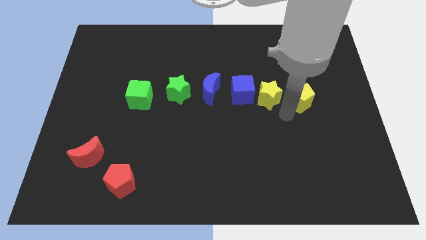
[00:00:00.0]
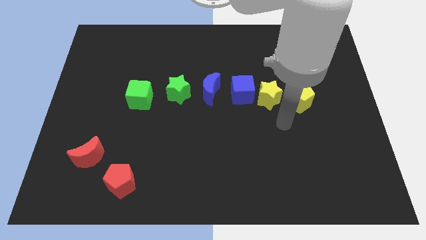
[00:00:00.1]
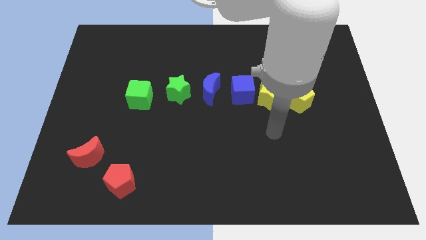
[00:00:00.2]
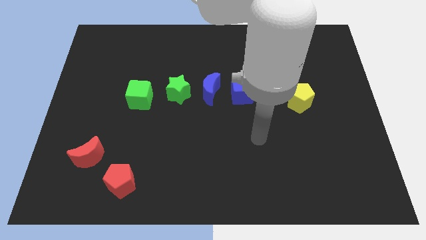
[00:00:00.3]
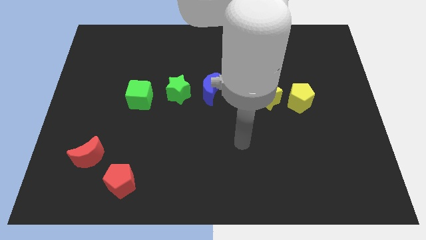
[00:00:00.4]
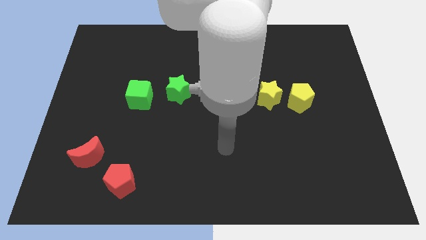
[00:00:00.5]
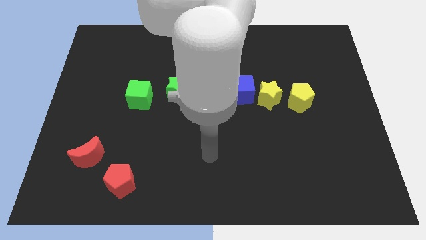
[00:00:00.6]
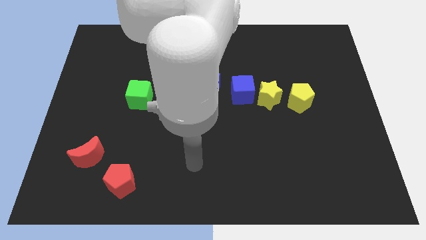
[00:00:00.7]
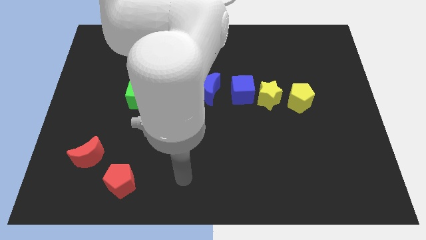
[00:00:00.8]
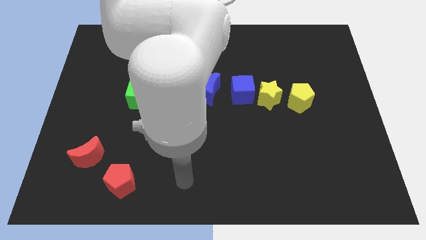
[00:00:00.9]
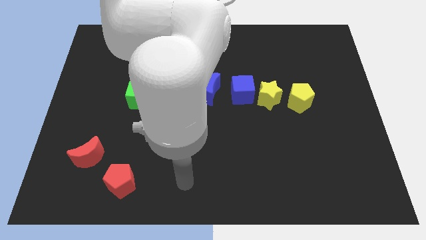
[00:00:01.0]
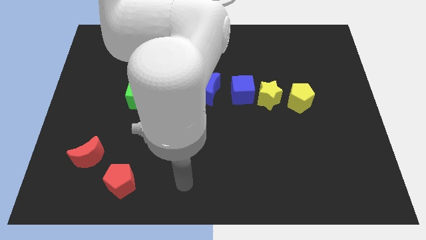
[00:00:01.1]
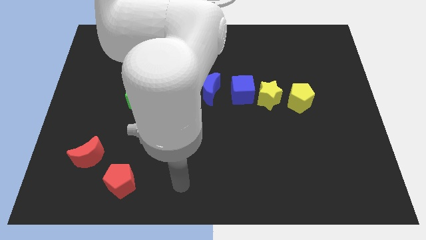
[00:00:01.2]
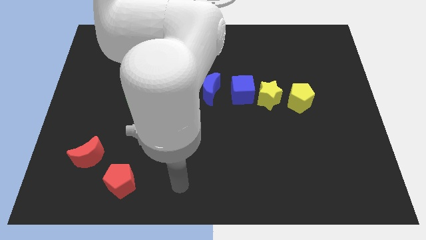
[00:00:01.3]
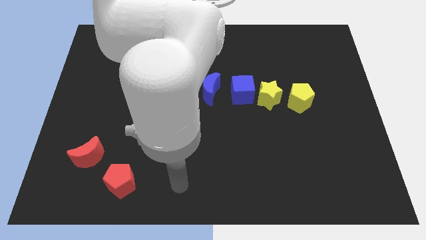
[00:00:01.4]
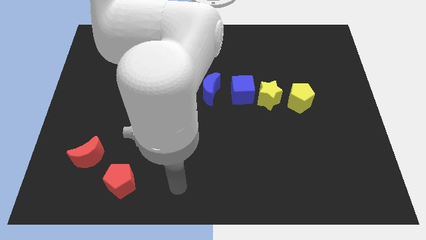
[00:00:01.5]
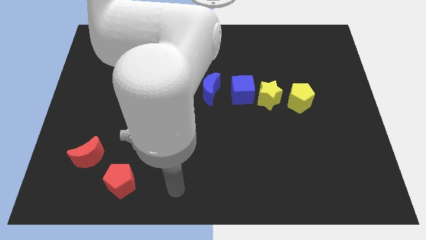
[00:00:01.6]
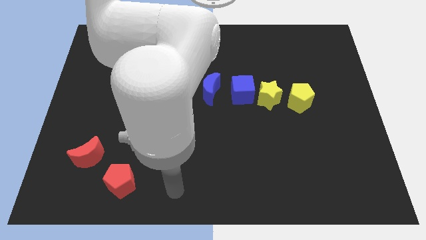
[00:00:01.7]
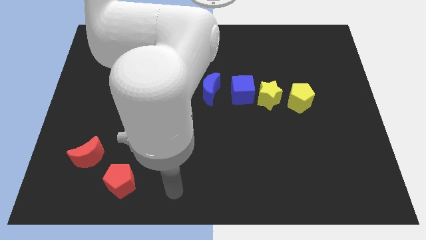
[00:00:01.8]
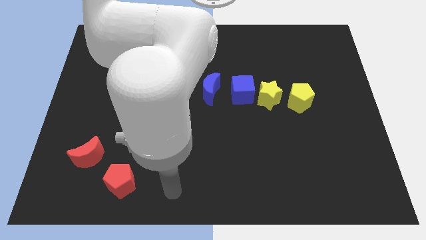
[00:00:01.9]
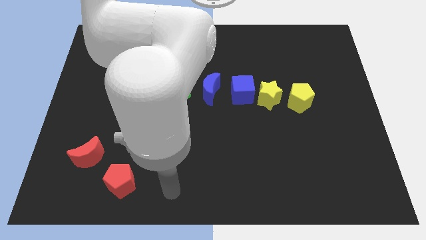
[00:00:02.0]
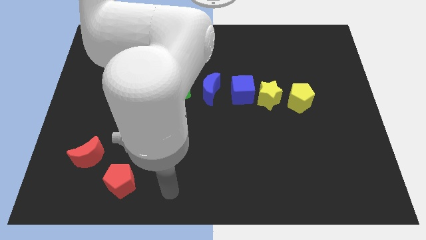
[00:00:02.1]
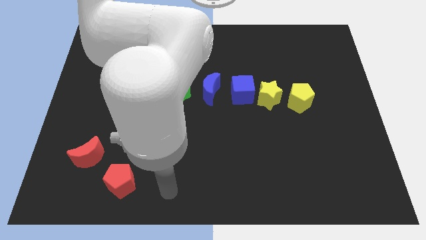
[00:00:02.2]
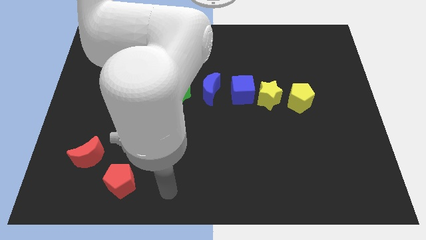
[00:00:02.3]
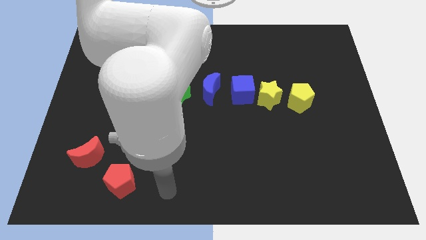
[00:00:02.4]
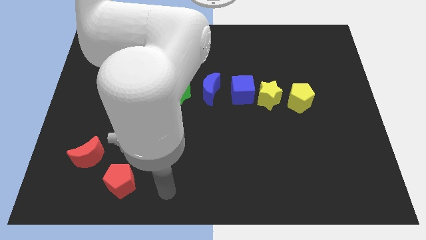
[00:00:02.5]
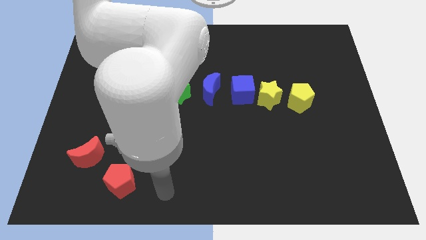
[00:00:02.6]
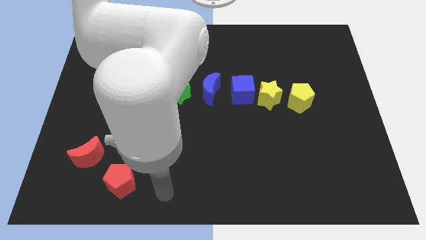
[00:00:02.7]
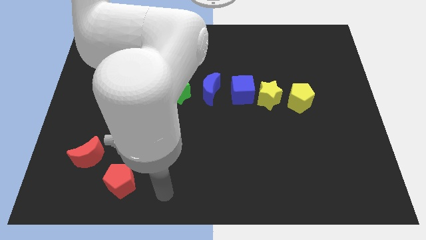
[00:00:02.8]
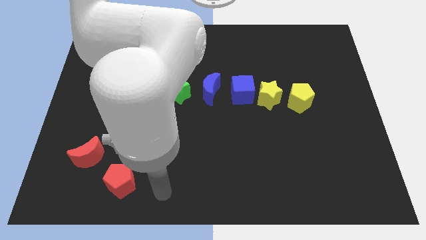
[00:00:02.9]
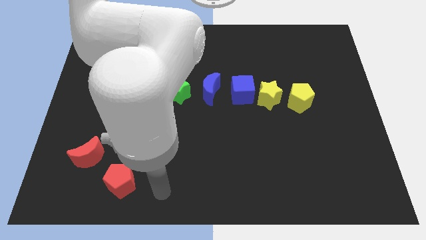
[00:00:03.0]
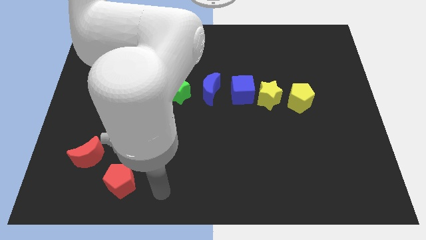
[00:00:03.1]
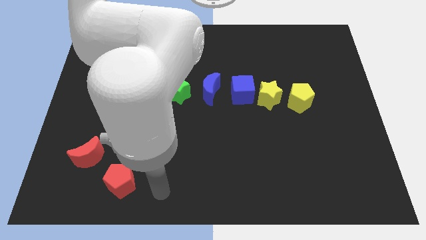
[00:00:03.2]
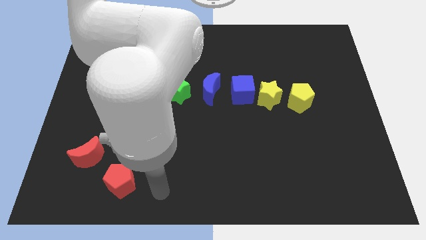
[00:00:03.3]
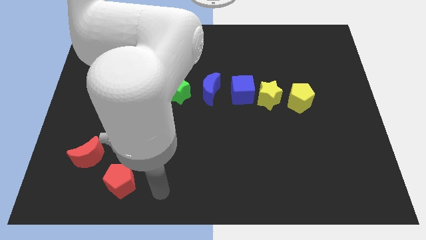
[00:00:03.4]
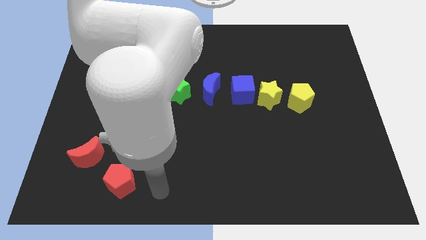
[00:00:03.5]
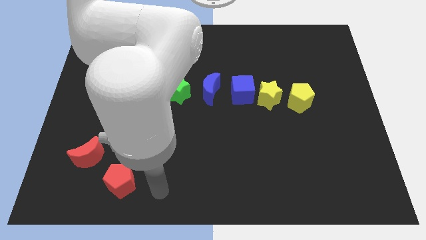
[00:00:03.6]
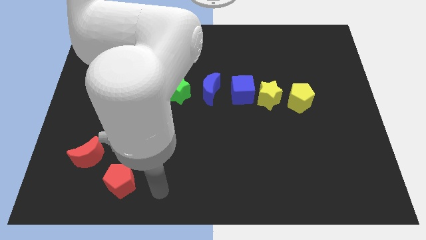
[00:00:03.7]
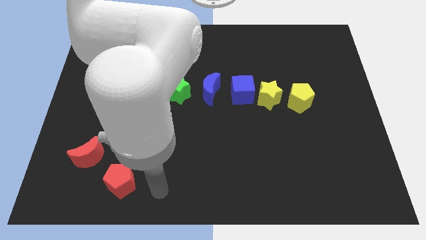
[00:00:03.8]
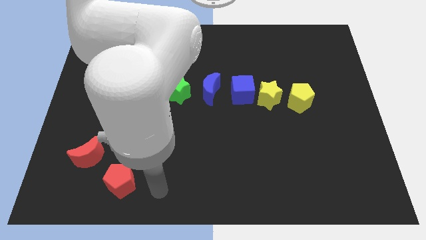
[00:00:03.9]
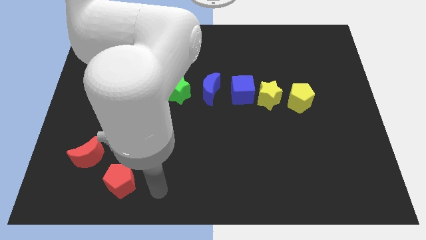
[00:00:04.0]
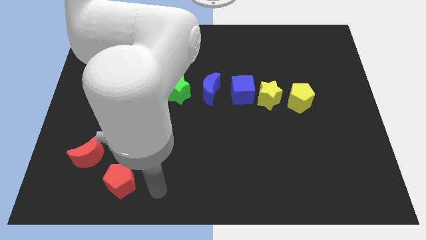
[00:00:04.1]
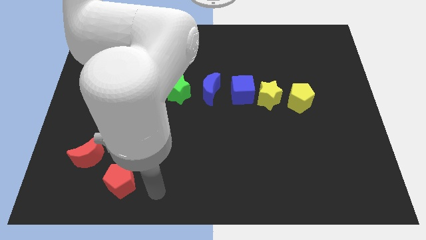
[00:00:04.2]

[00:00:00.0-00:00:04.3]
move your arm to the right of the red pentagon

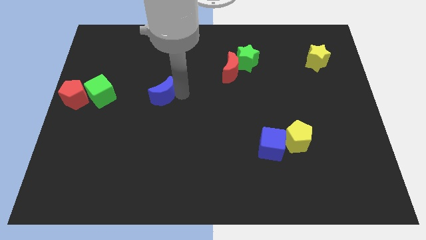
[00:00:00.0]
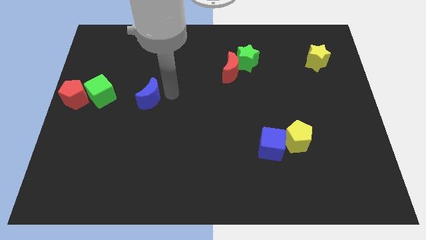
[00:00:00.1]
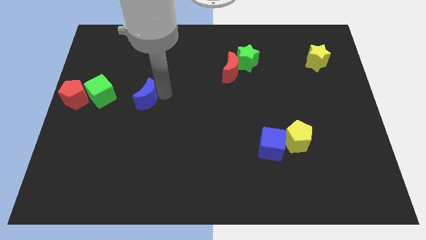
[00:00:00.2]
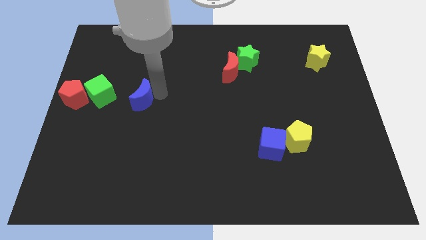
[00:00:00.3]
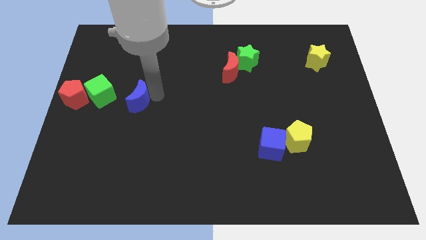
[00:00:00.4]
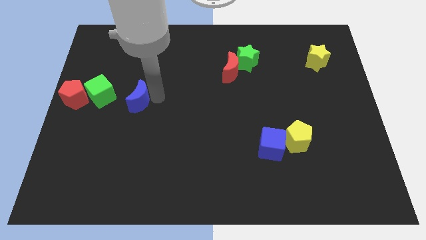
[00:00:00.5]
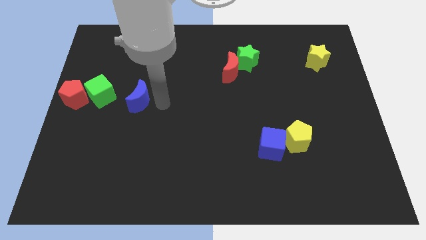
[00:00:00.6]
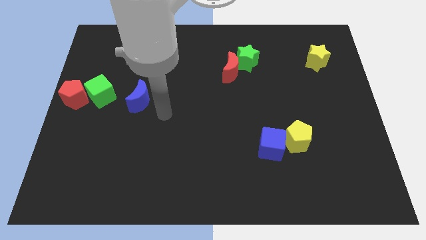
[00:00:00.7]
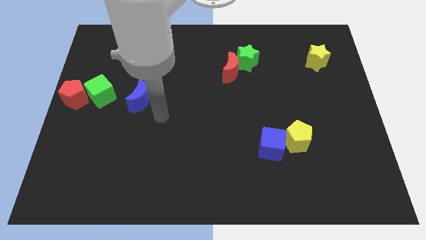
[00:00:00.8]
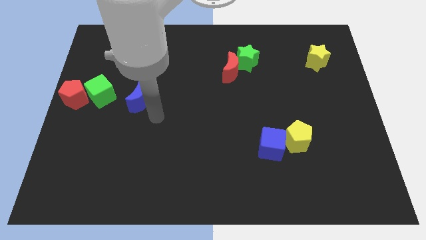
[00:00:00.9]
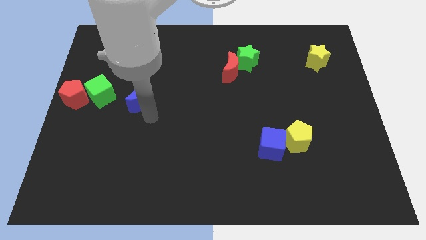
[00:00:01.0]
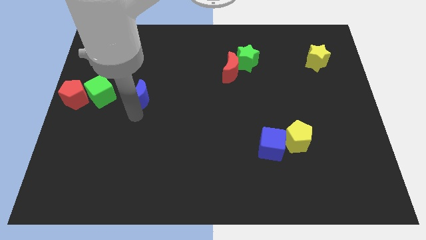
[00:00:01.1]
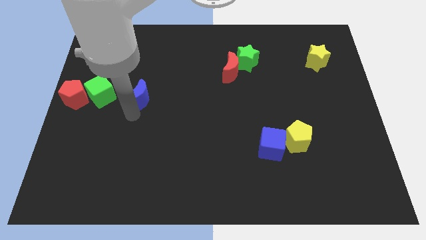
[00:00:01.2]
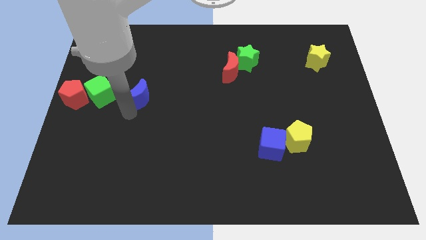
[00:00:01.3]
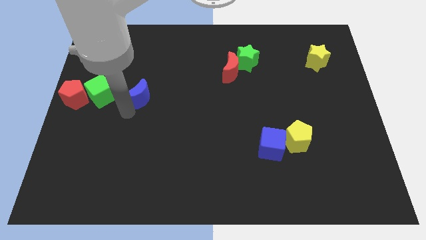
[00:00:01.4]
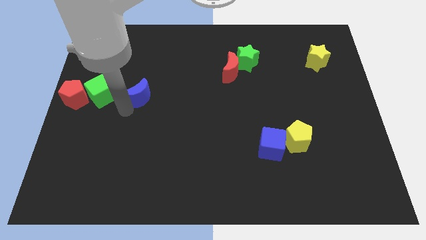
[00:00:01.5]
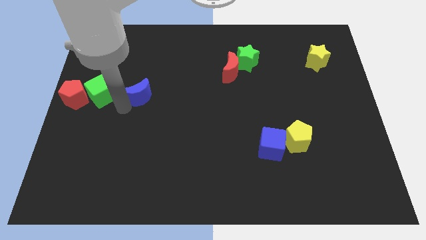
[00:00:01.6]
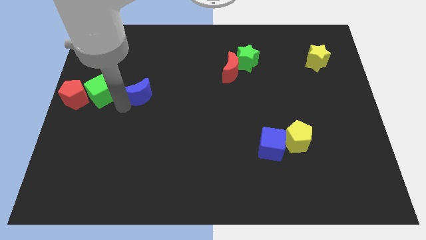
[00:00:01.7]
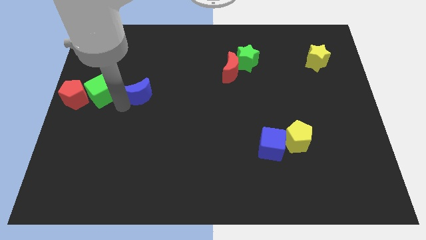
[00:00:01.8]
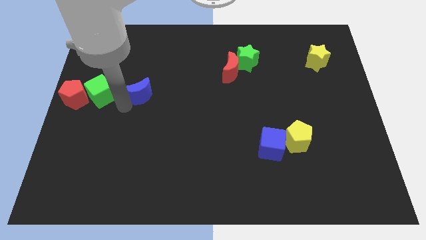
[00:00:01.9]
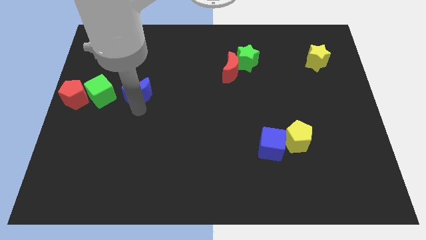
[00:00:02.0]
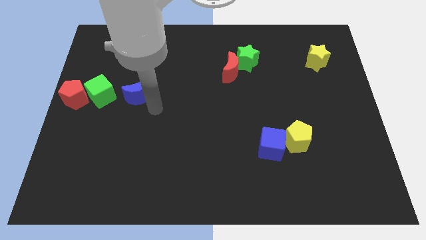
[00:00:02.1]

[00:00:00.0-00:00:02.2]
place blue crescent near to green cube

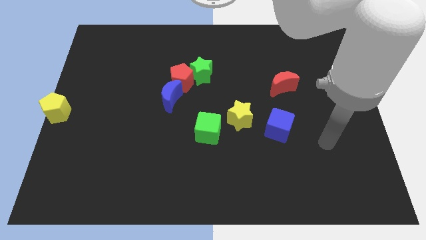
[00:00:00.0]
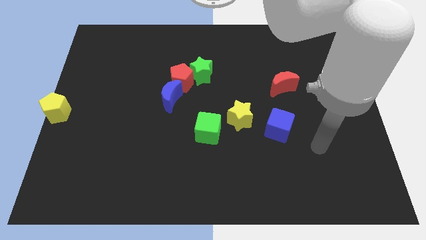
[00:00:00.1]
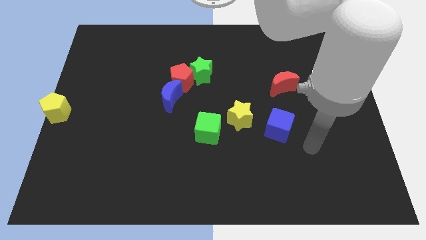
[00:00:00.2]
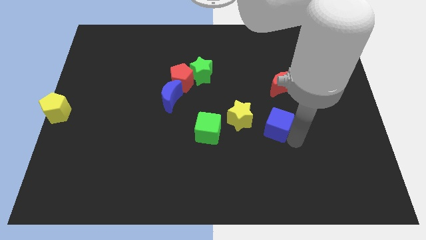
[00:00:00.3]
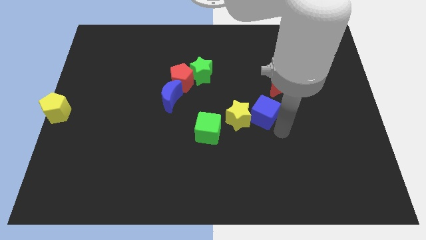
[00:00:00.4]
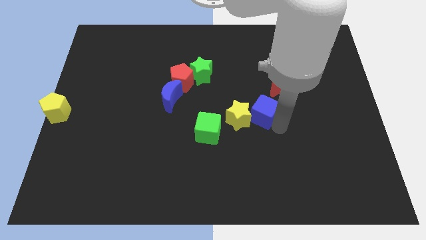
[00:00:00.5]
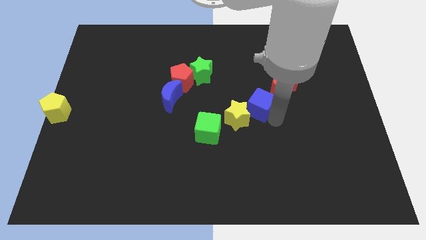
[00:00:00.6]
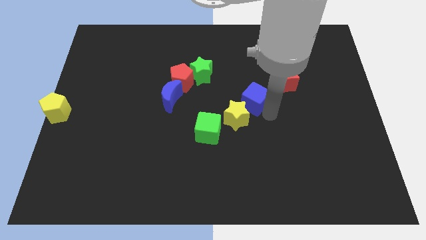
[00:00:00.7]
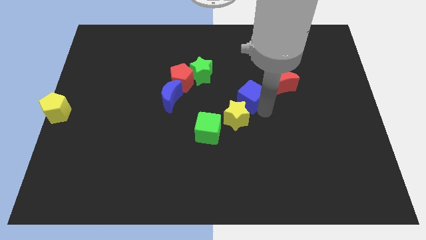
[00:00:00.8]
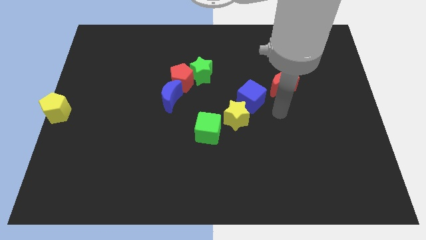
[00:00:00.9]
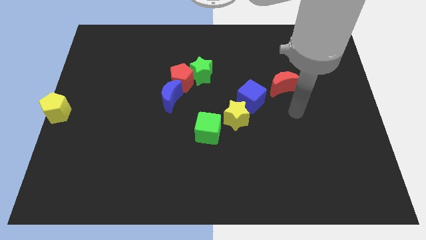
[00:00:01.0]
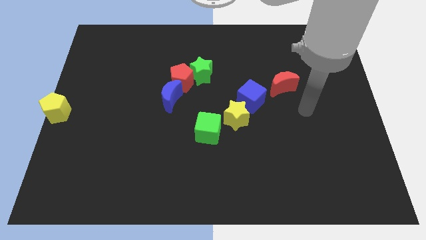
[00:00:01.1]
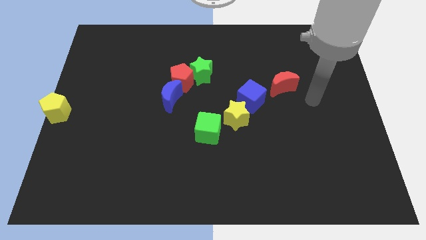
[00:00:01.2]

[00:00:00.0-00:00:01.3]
place the blue cube in between the yellow star and red crescent

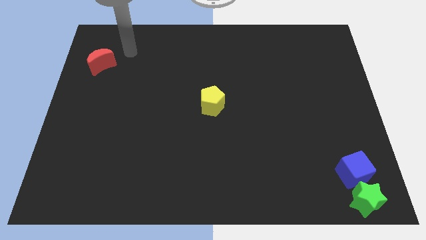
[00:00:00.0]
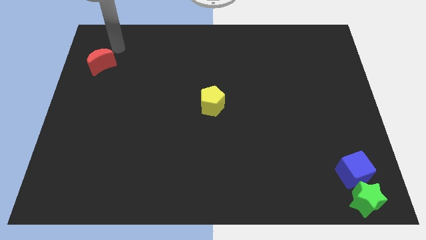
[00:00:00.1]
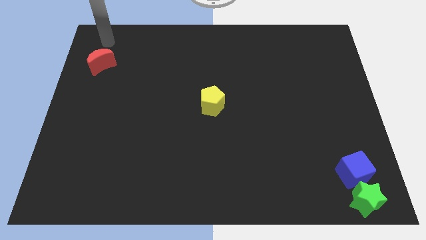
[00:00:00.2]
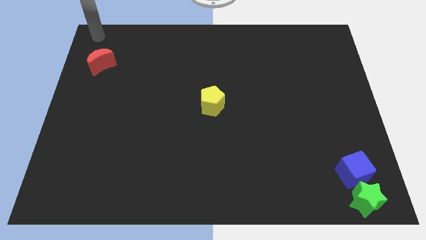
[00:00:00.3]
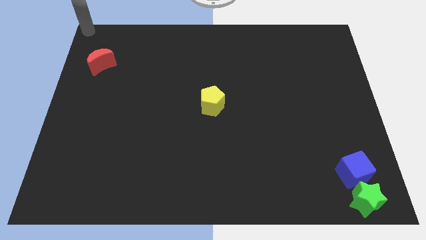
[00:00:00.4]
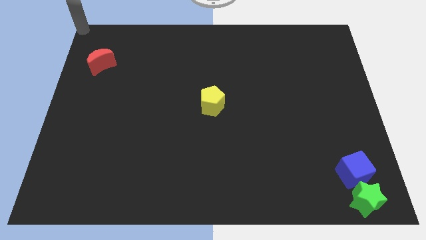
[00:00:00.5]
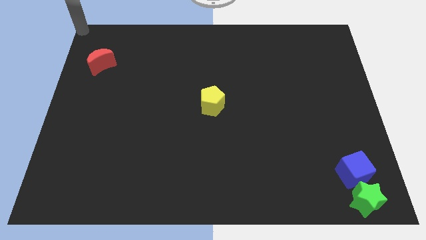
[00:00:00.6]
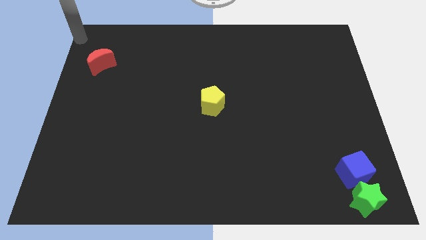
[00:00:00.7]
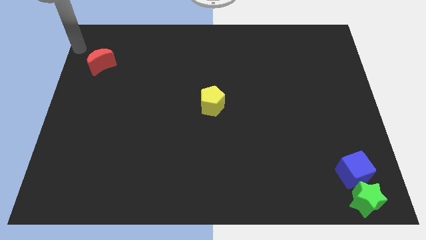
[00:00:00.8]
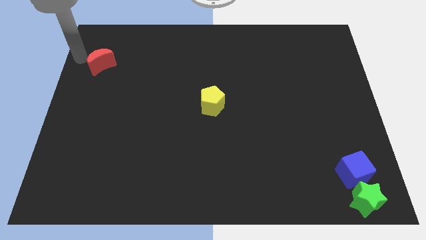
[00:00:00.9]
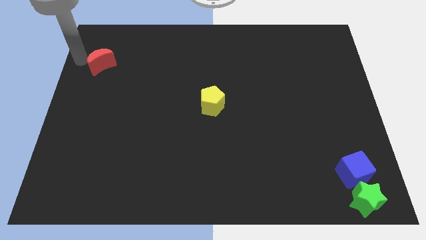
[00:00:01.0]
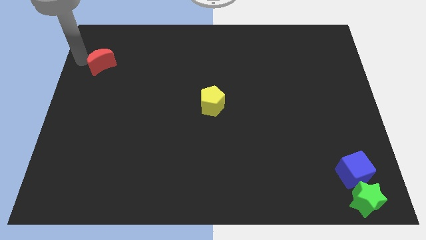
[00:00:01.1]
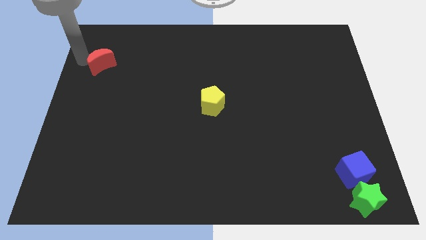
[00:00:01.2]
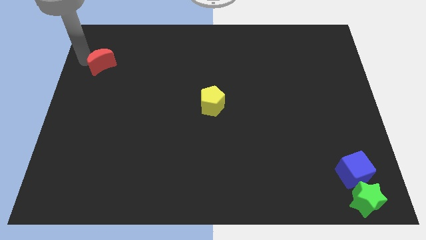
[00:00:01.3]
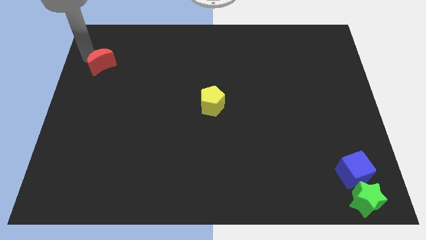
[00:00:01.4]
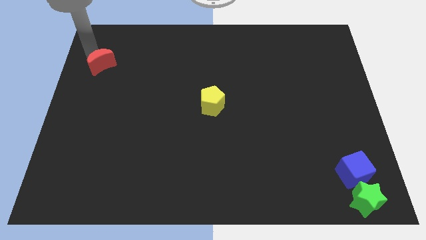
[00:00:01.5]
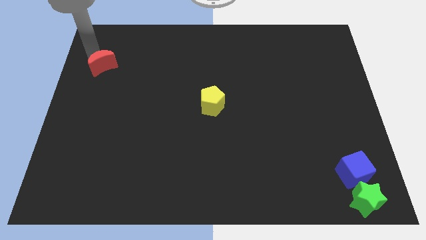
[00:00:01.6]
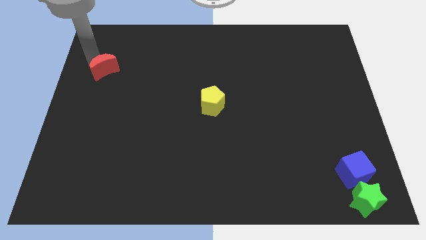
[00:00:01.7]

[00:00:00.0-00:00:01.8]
touch the top side of the red crescent
